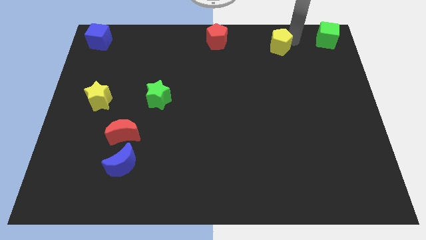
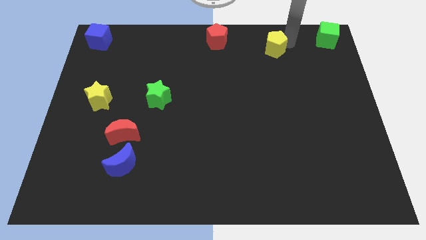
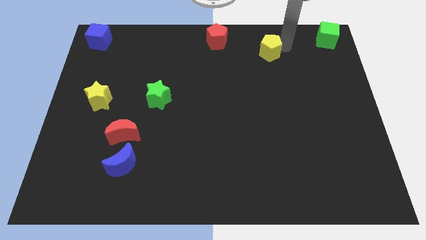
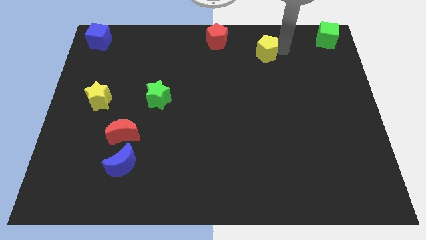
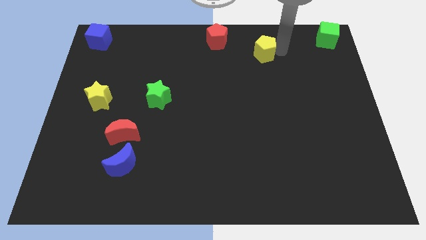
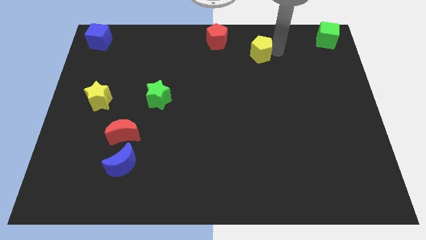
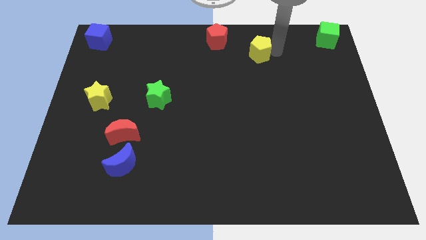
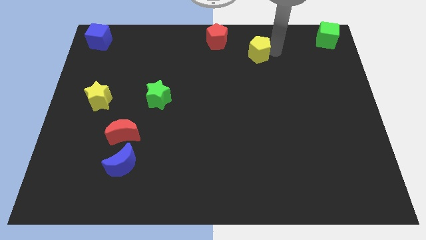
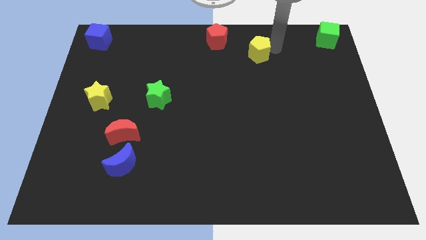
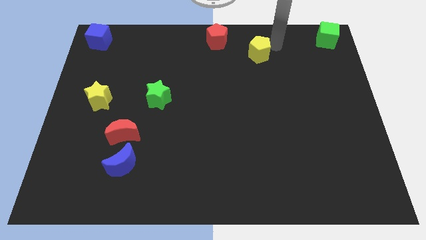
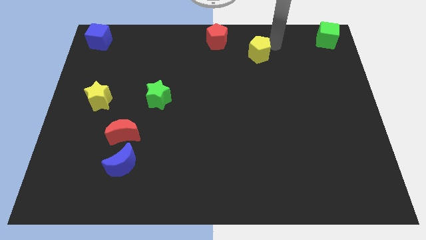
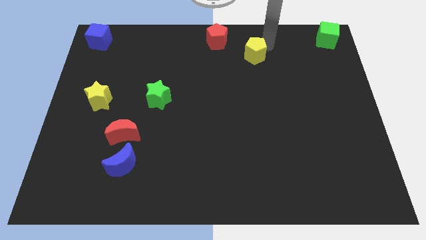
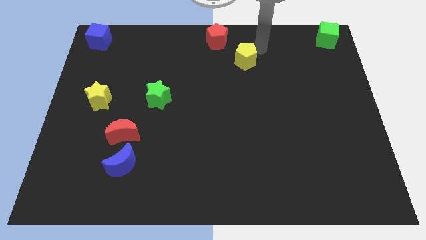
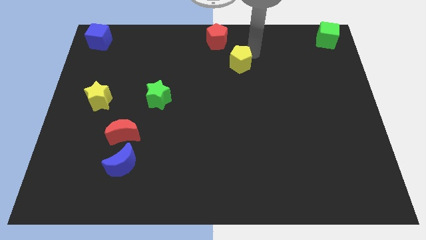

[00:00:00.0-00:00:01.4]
place yellow pentgon to the bottom right of the red pentagon

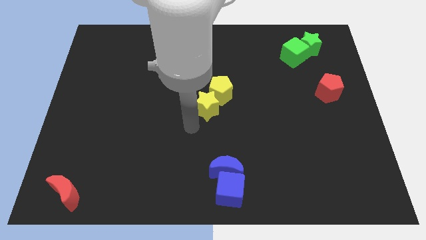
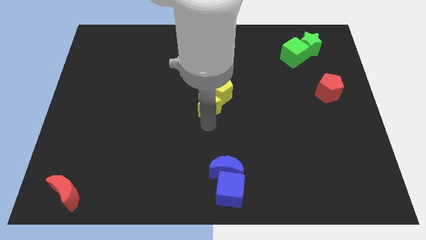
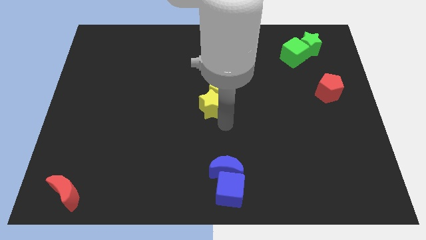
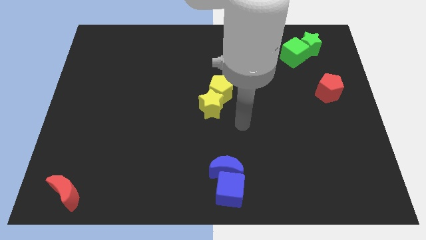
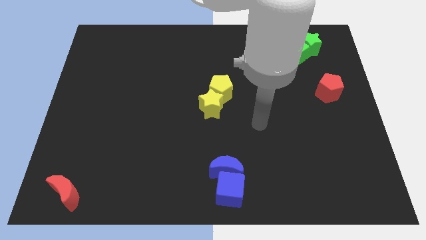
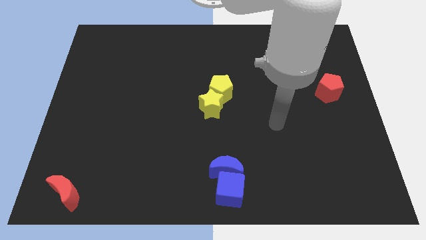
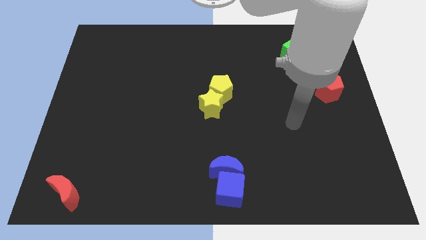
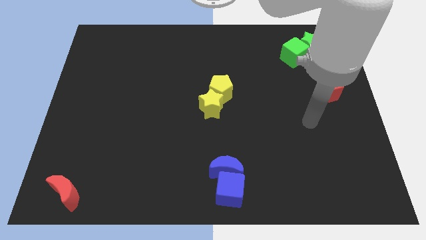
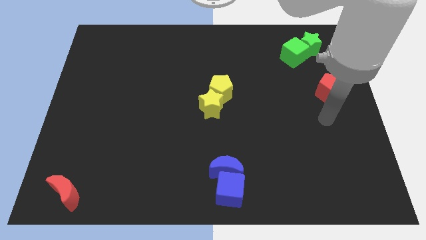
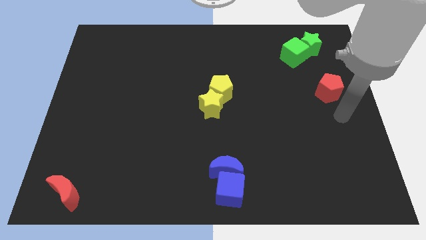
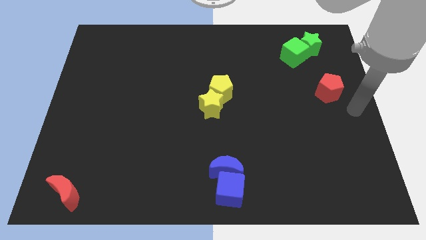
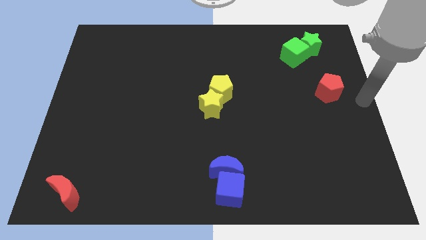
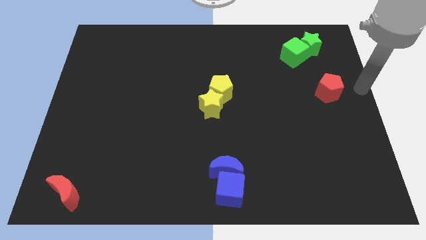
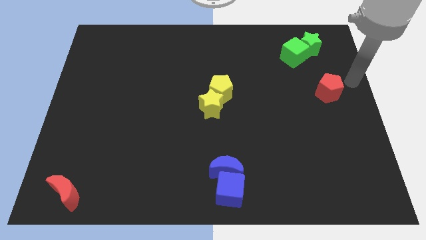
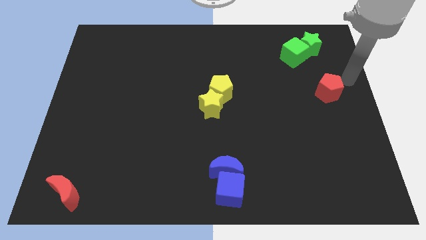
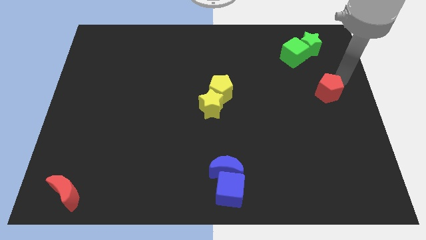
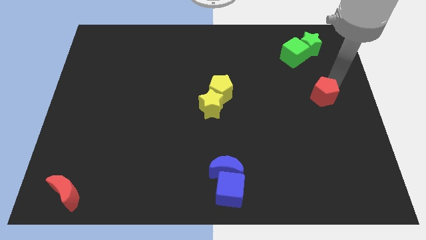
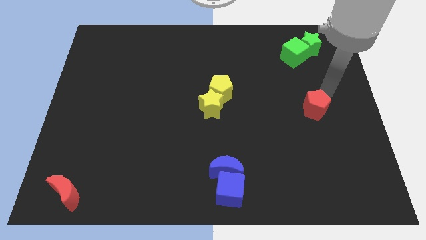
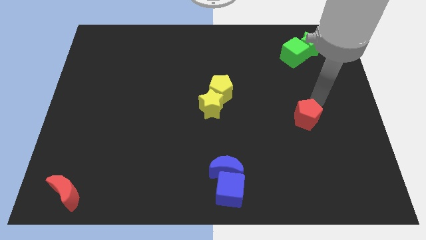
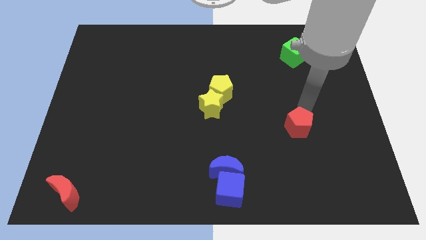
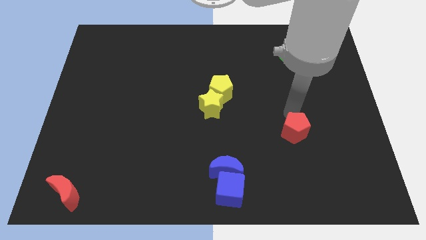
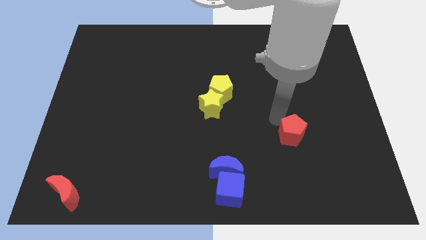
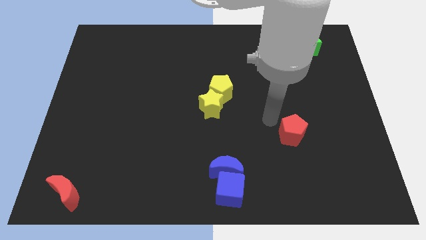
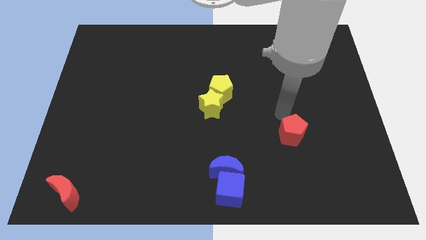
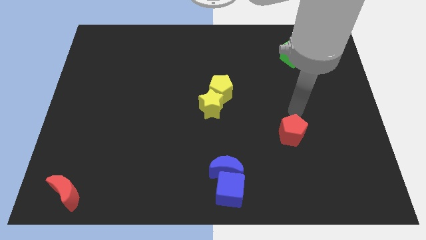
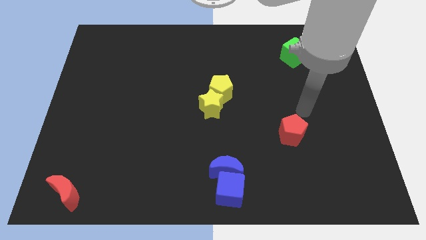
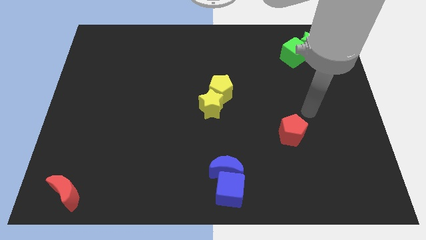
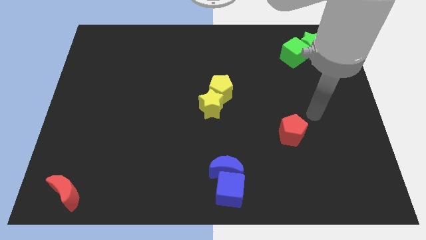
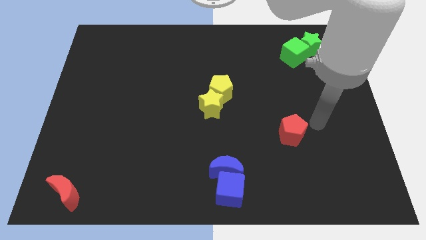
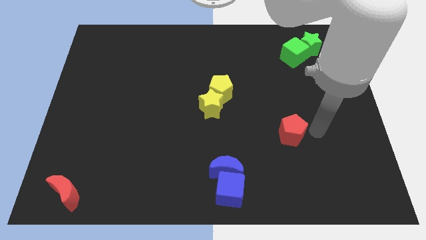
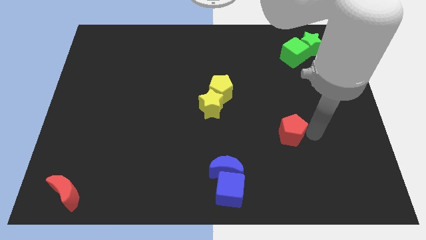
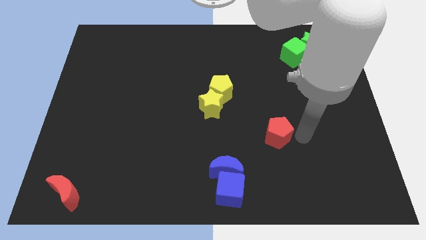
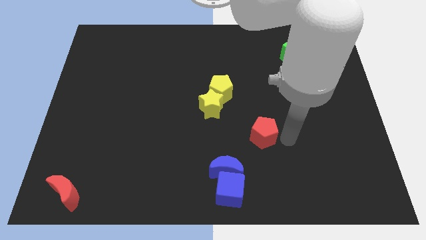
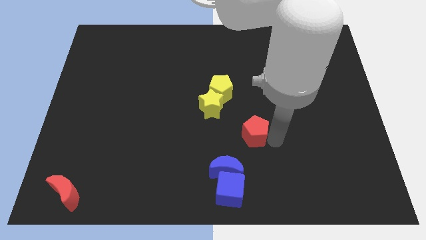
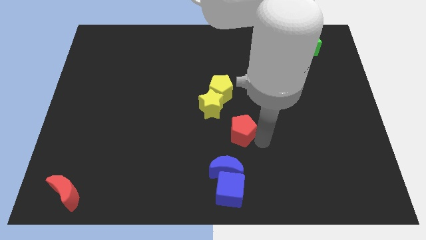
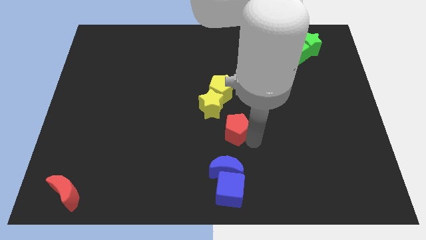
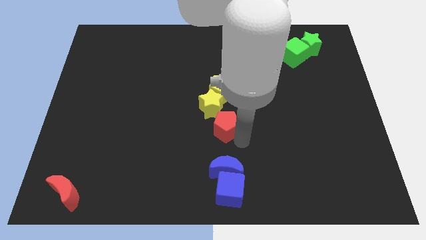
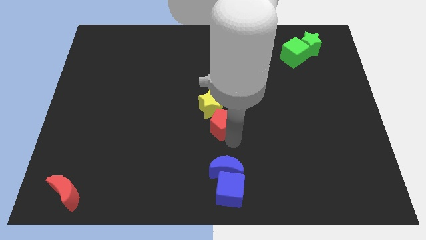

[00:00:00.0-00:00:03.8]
place the red pentagon below the yellow star

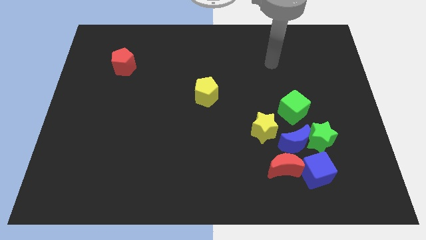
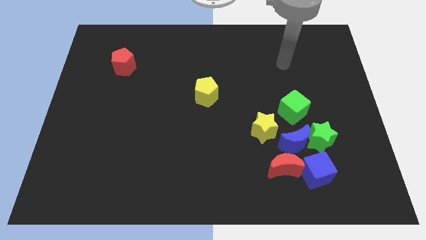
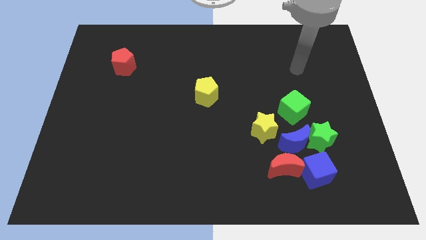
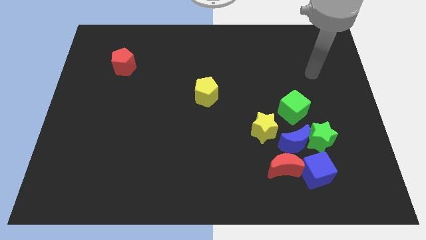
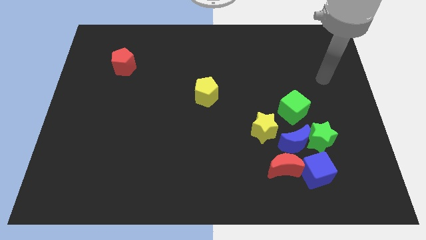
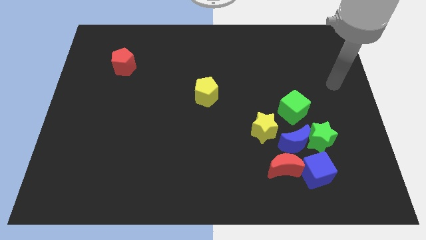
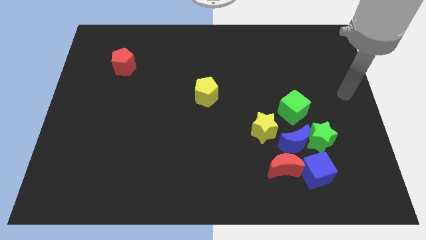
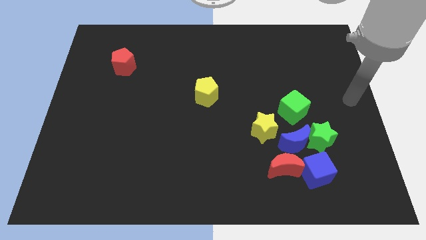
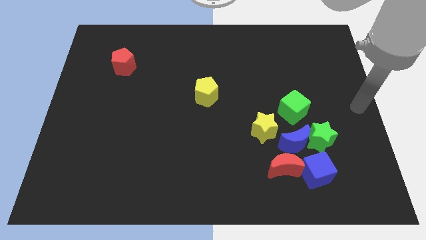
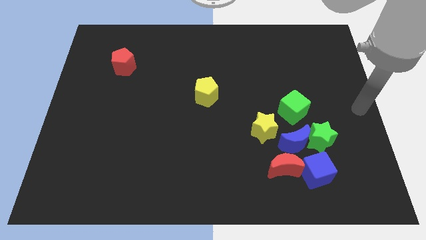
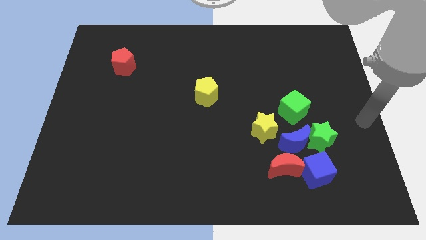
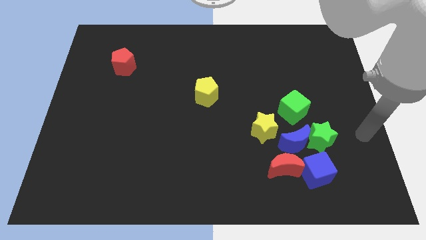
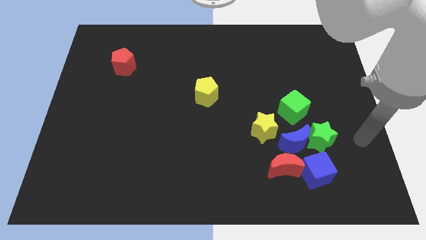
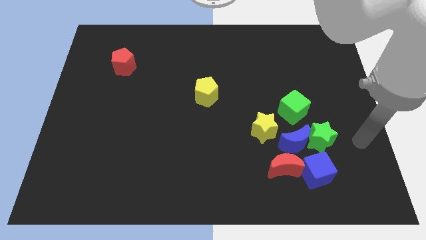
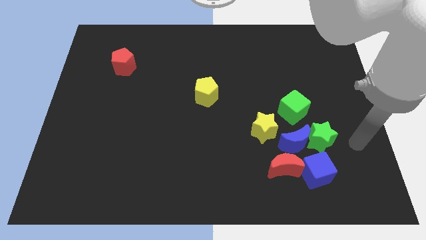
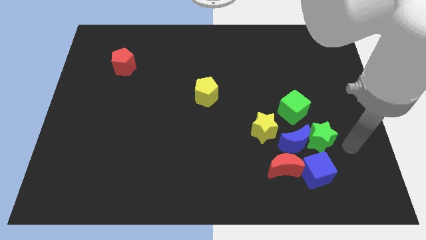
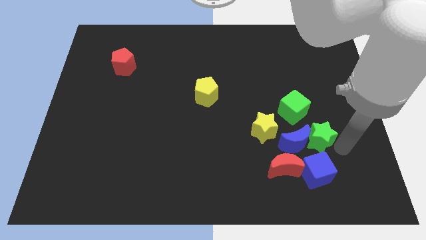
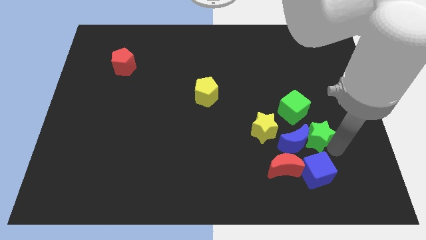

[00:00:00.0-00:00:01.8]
place your arm below the green star

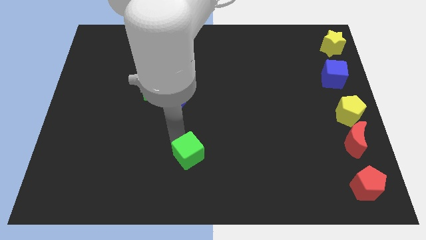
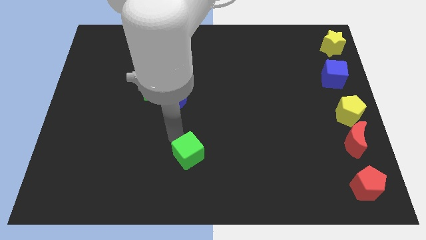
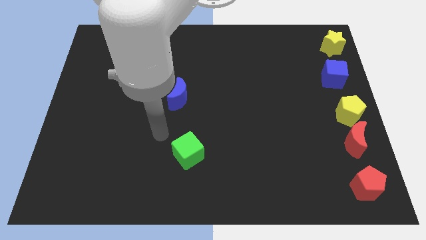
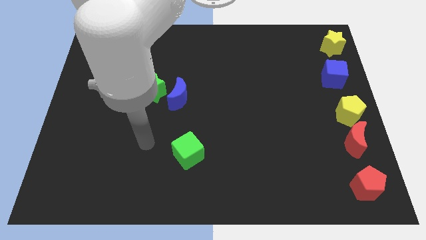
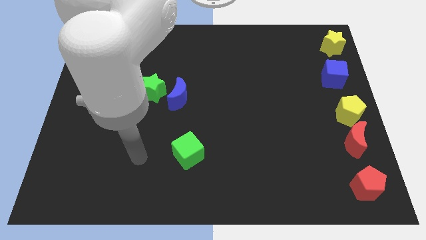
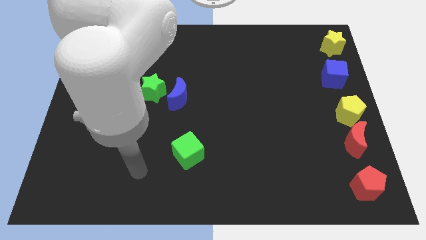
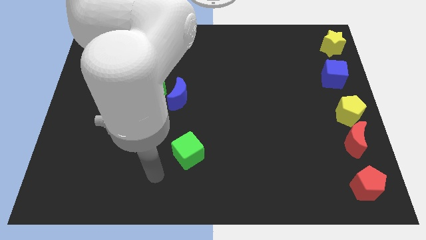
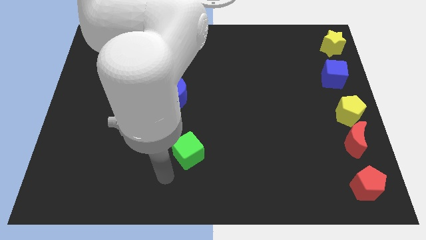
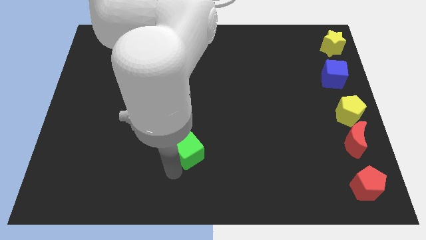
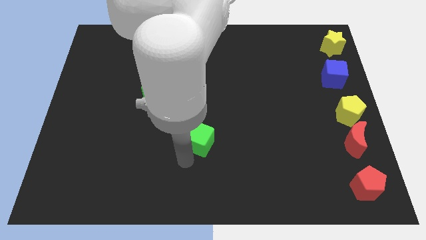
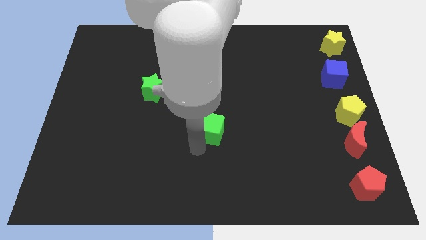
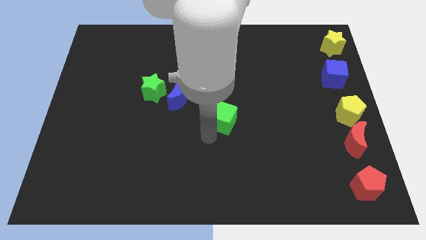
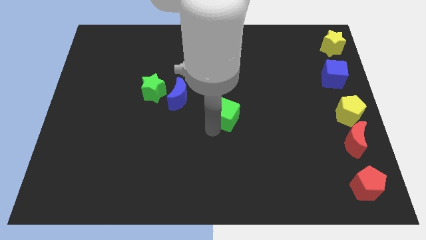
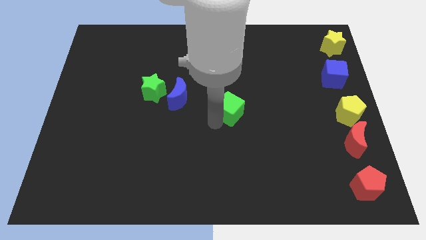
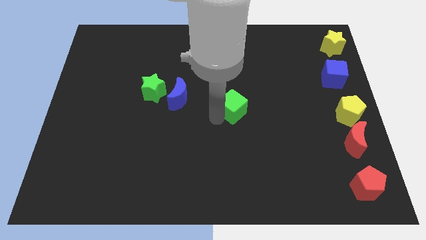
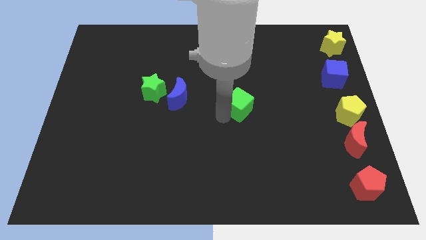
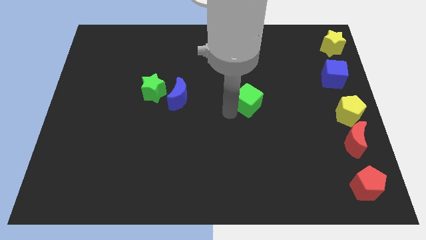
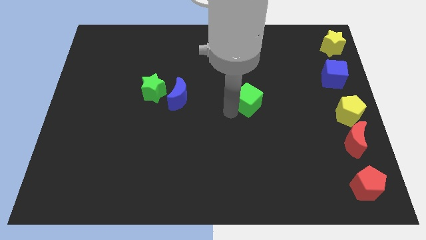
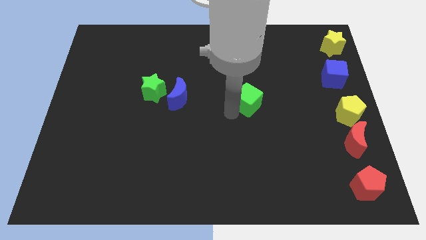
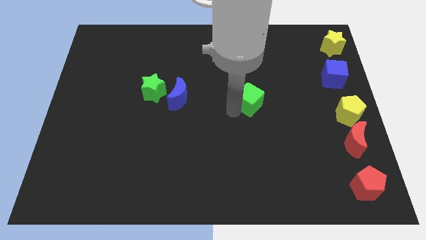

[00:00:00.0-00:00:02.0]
push green cube to the top side of the board
